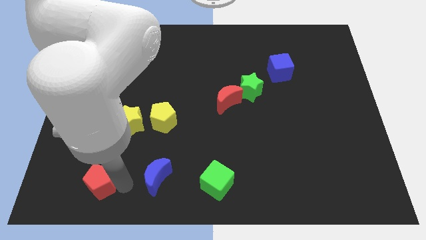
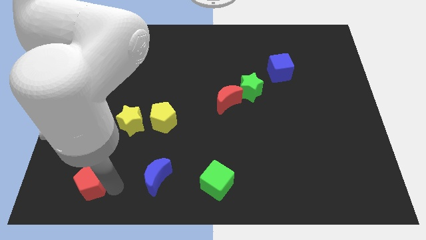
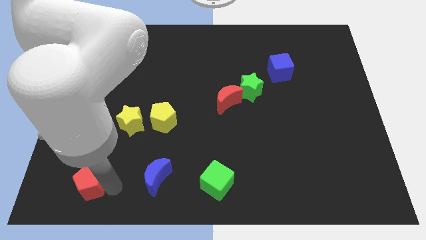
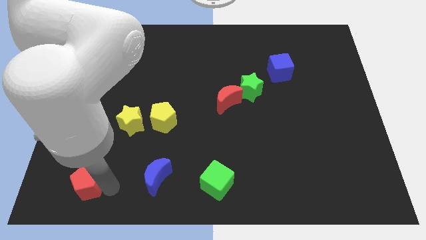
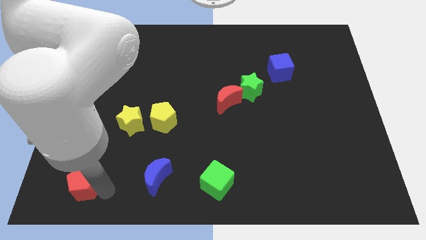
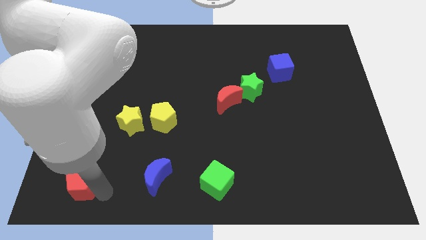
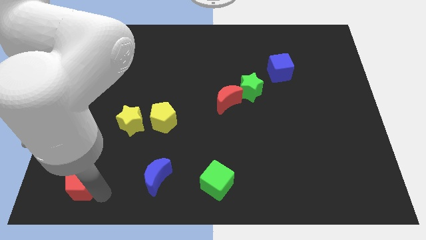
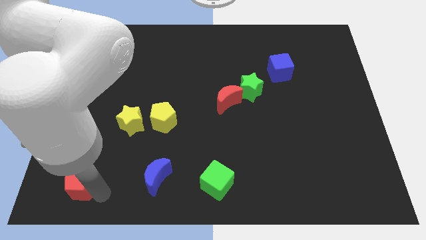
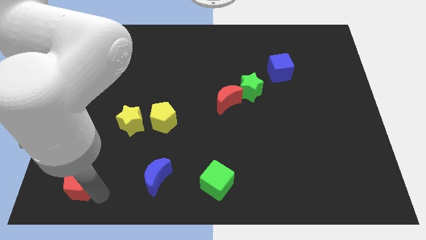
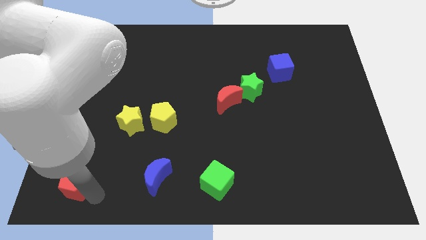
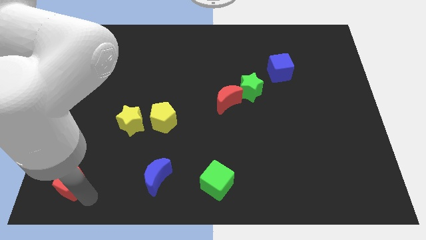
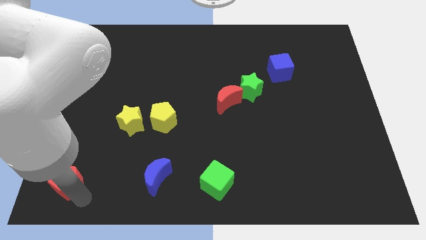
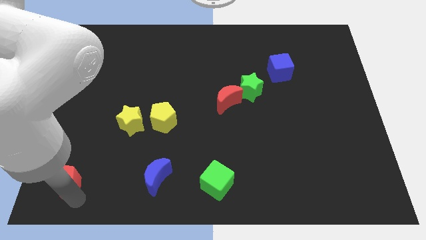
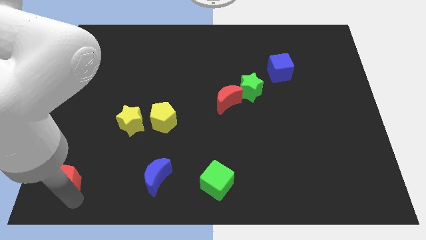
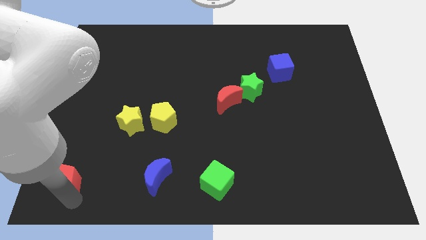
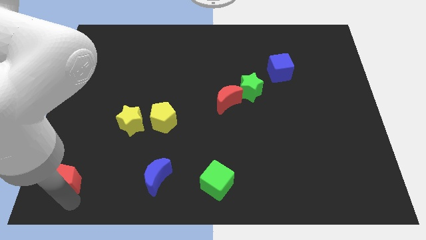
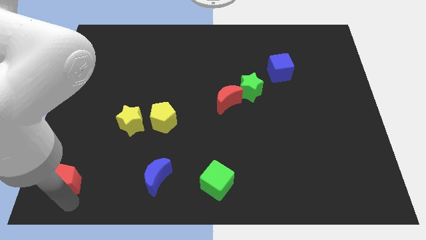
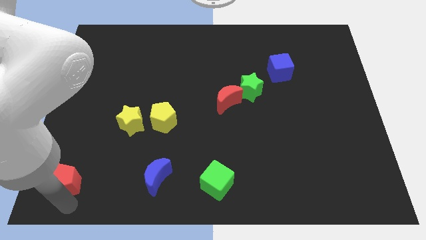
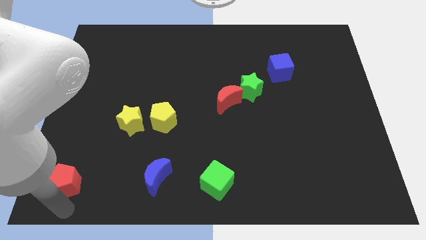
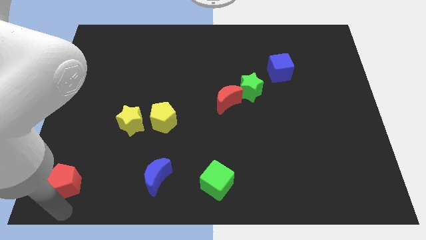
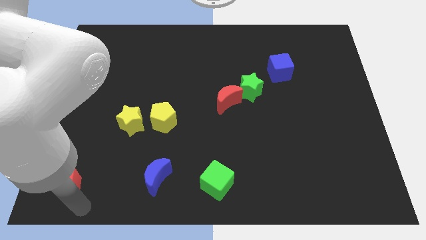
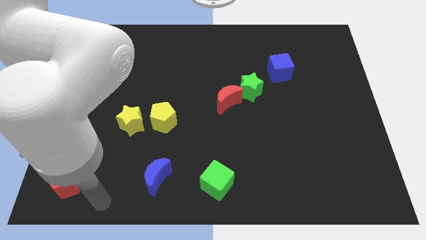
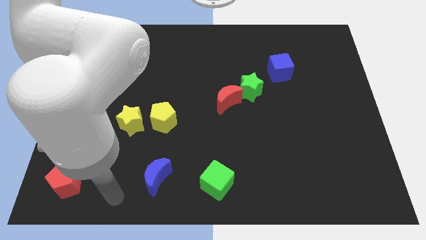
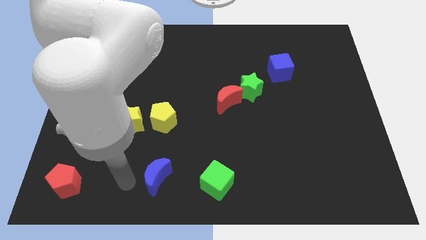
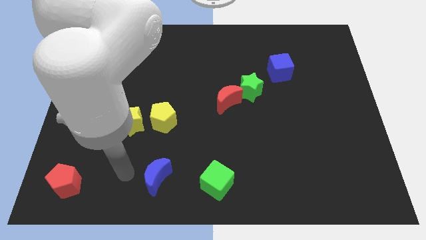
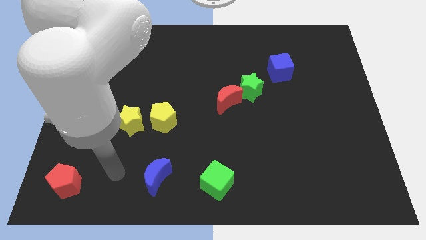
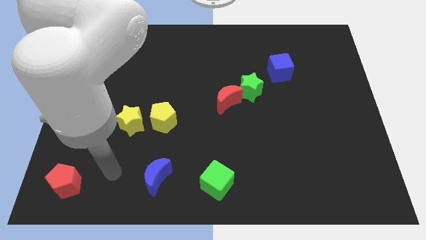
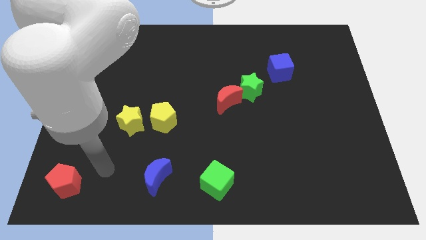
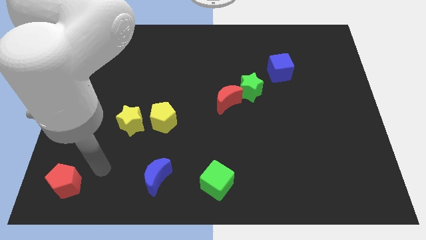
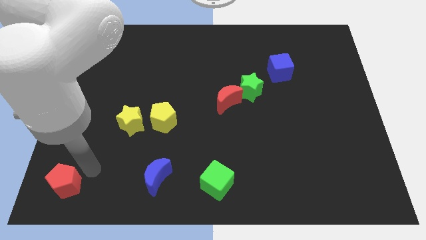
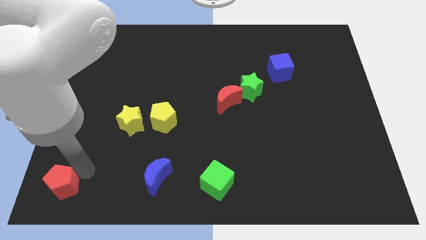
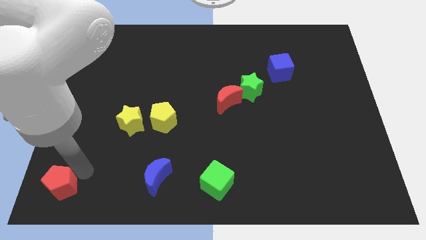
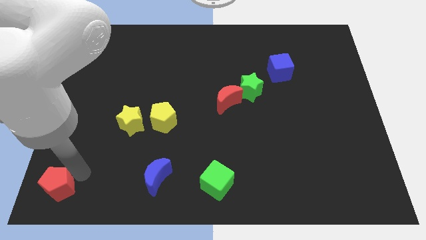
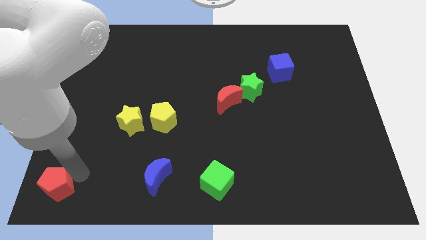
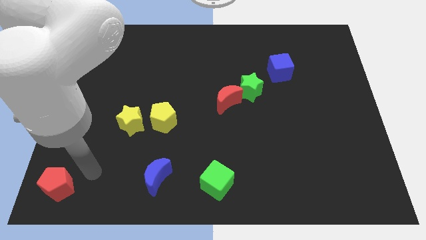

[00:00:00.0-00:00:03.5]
place the red pentagon at the bottom left of the board

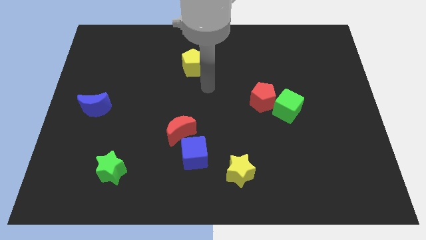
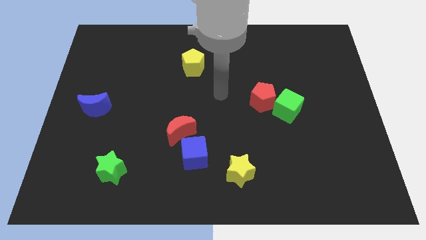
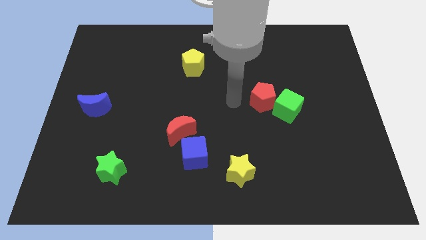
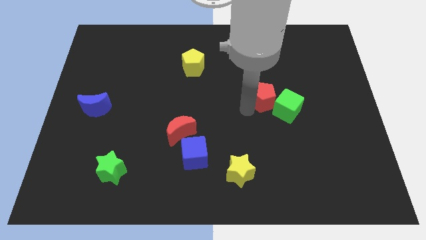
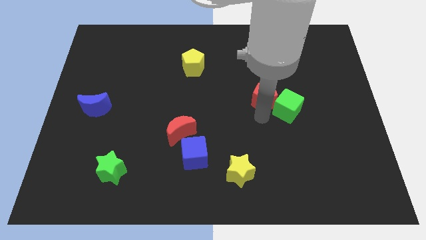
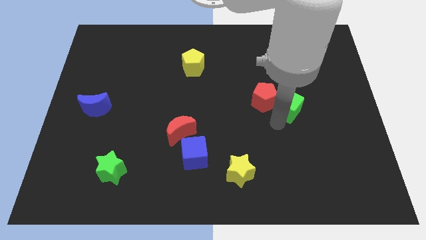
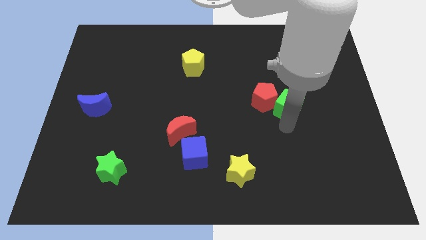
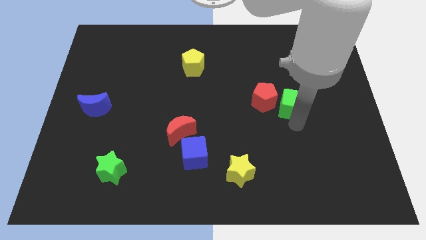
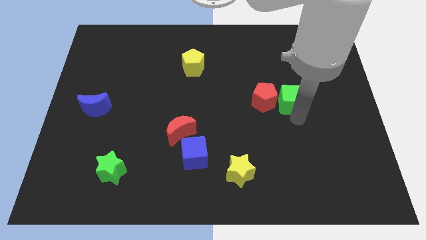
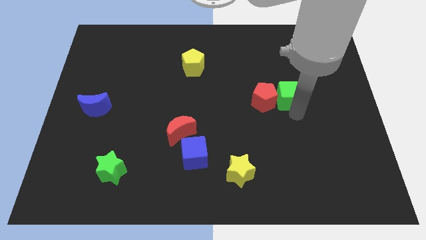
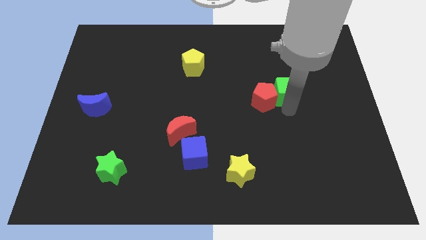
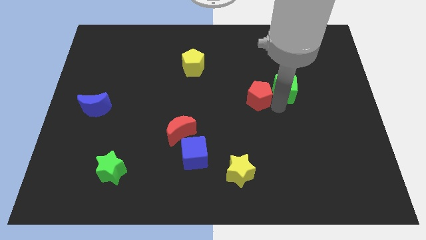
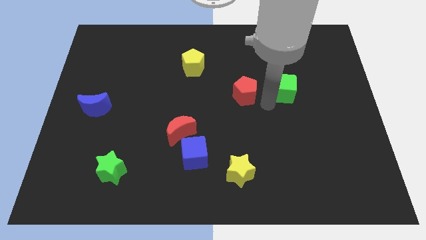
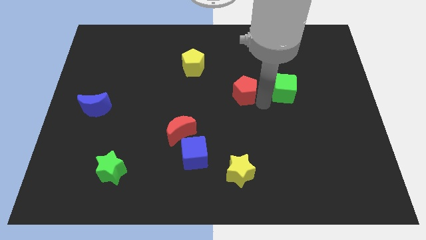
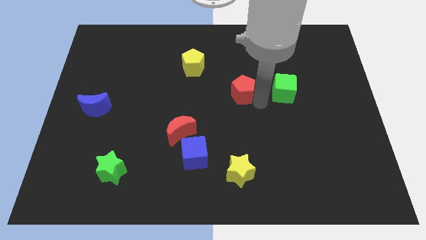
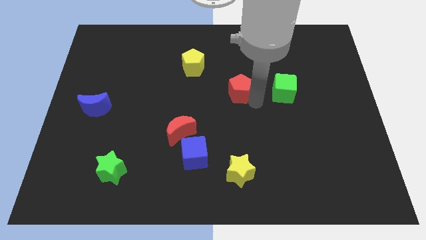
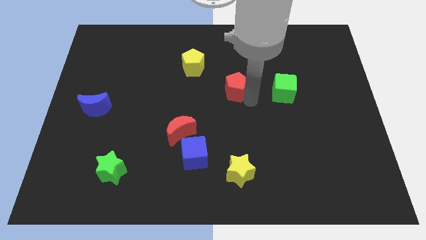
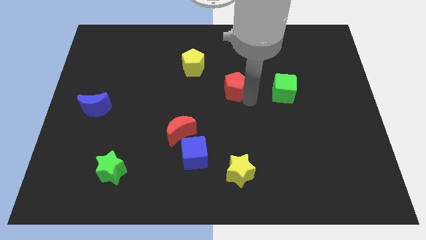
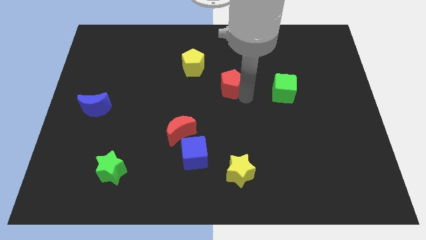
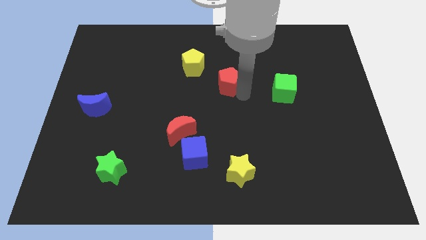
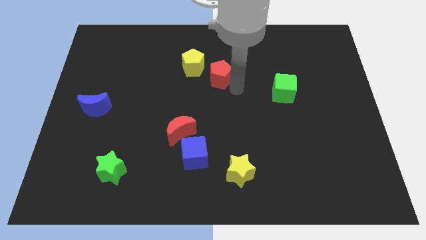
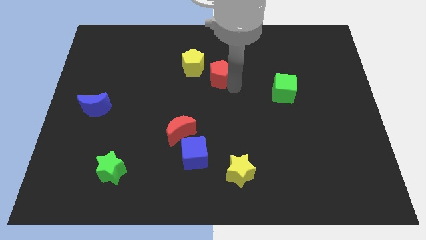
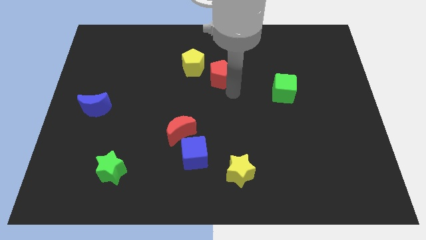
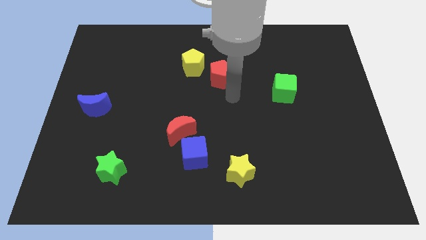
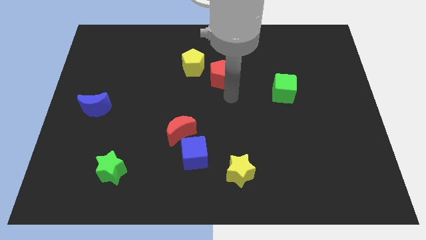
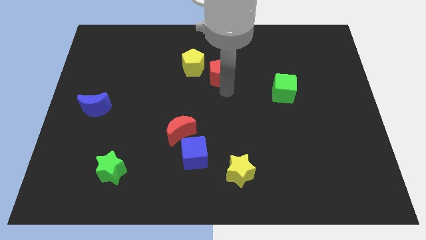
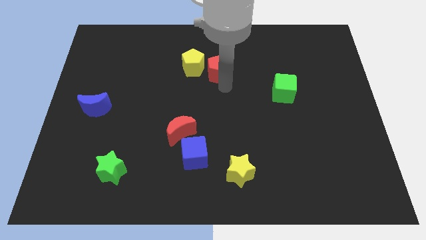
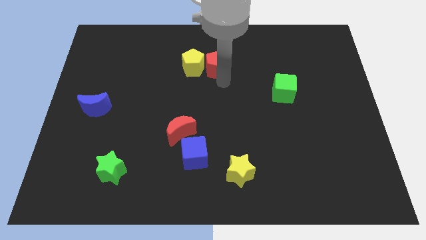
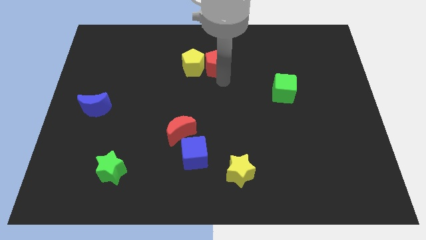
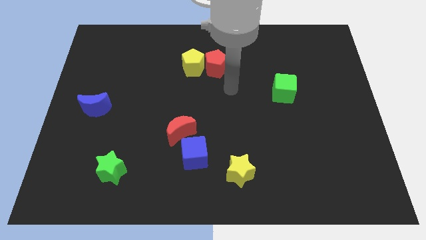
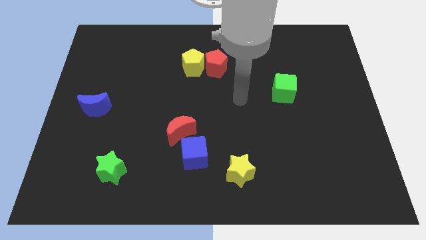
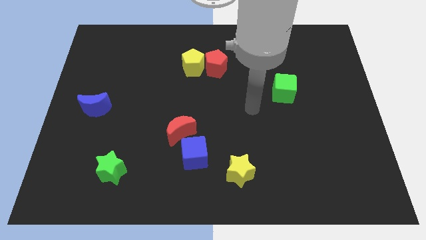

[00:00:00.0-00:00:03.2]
place the red pentagon parallel right to the yellow pentagon

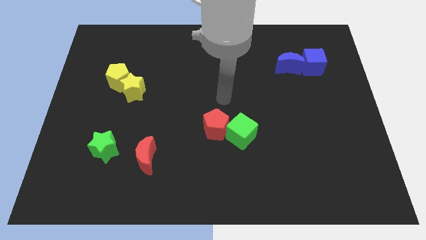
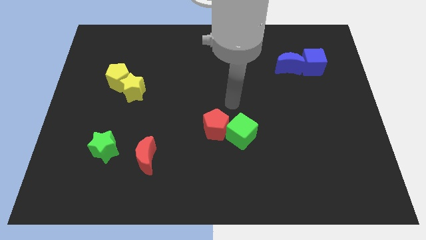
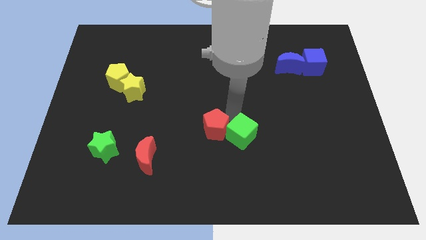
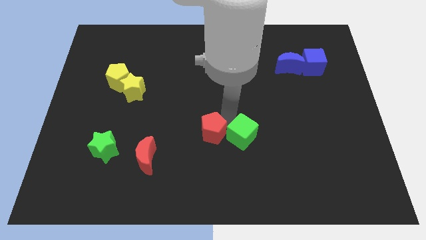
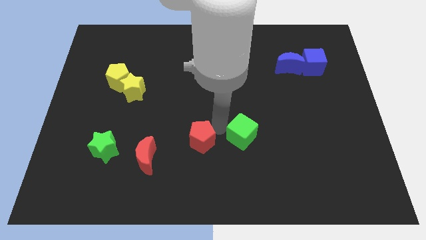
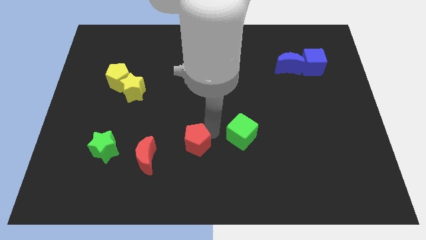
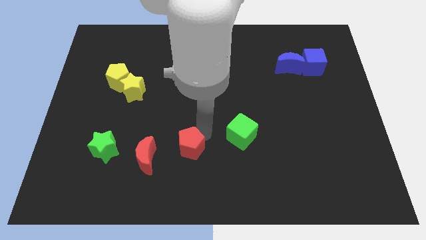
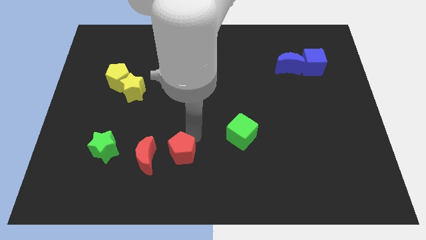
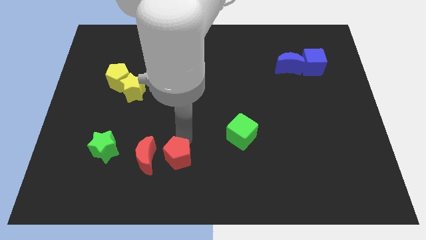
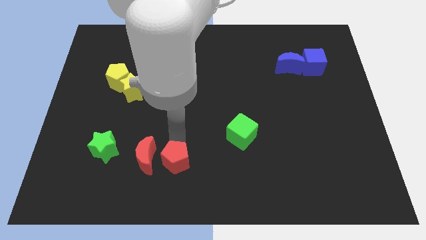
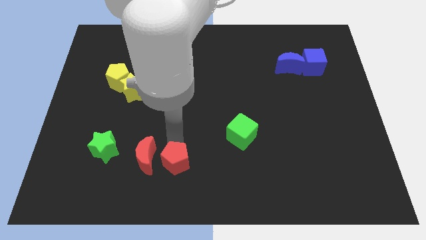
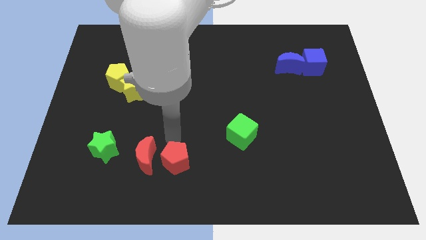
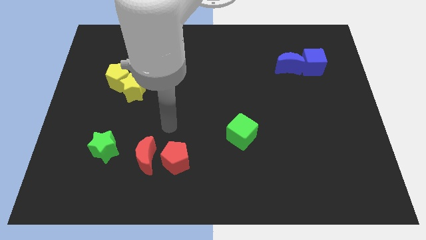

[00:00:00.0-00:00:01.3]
push the red pentagon to the right of the red crescent

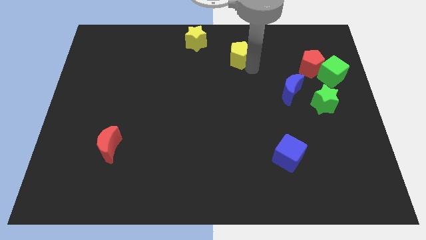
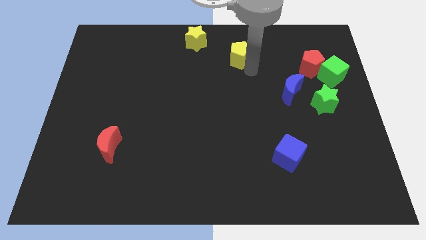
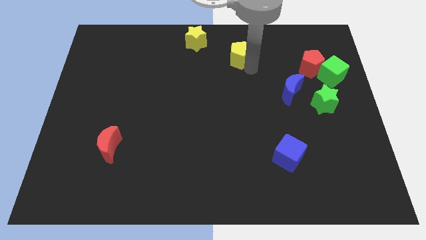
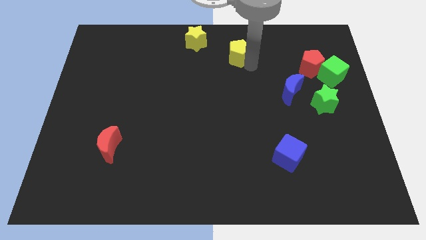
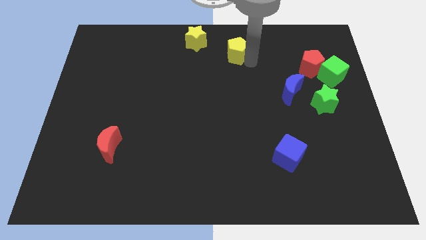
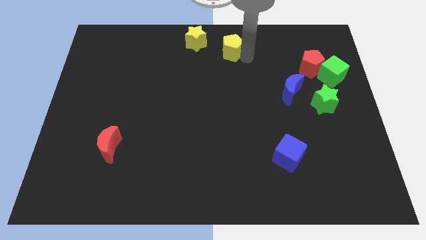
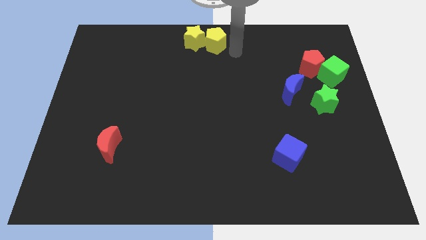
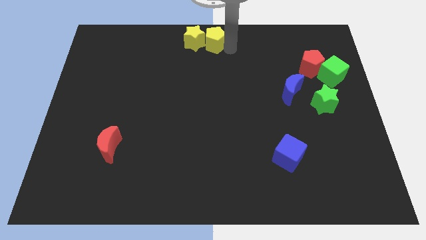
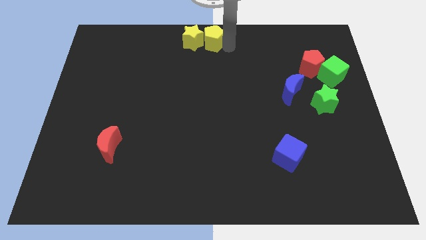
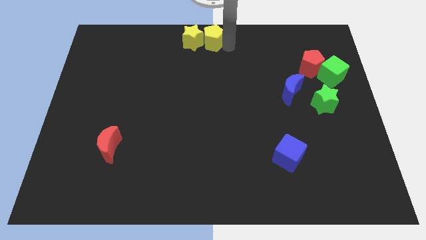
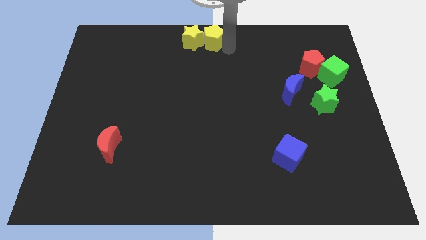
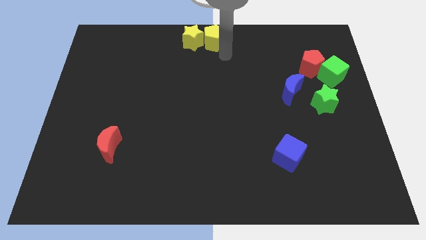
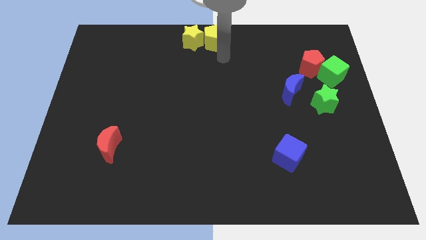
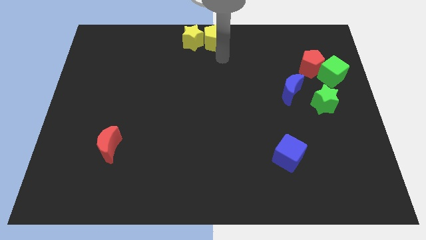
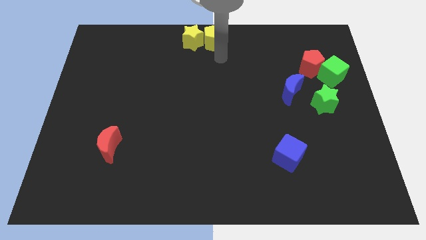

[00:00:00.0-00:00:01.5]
push the yellow pentagon to the right of the yellow star
